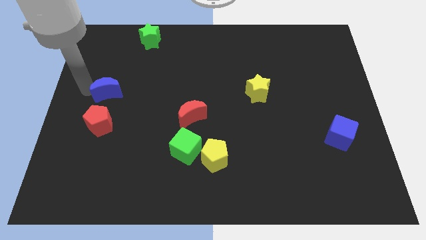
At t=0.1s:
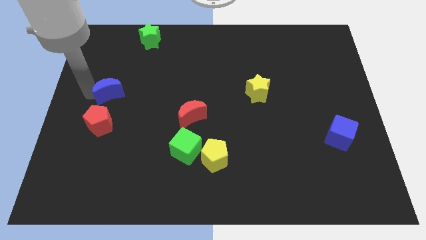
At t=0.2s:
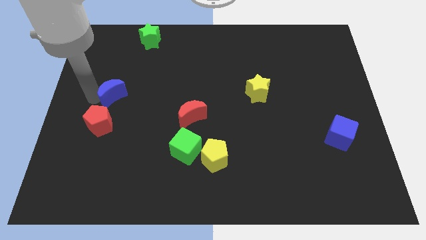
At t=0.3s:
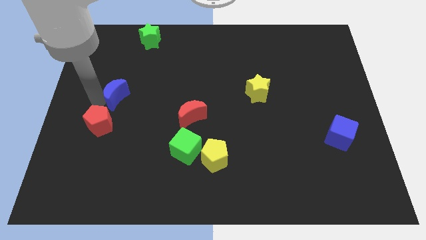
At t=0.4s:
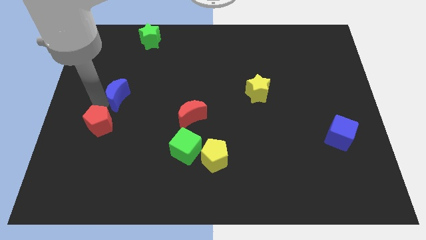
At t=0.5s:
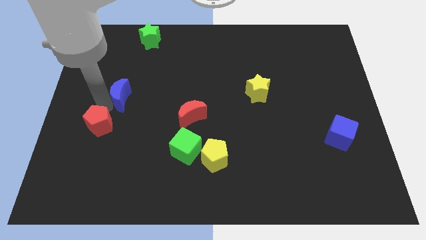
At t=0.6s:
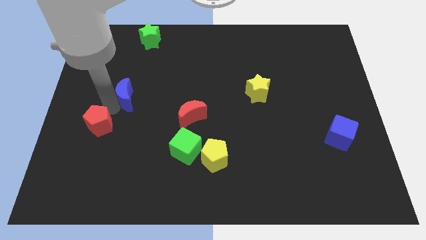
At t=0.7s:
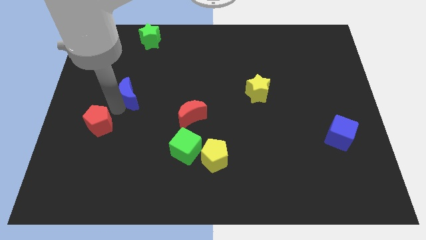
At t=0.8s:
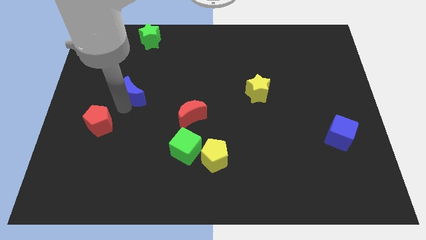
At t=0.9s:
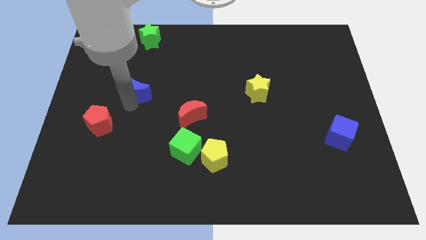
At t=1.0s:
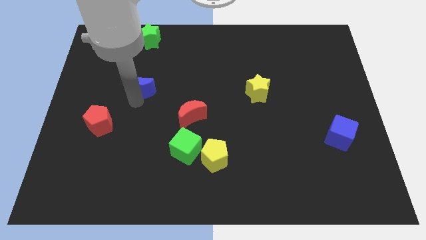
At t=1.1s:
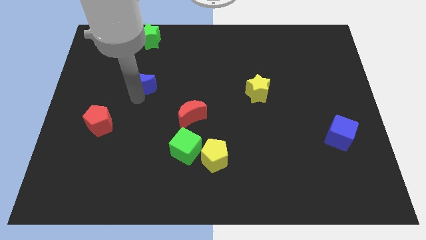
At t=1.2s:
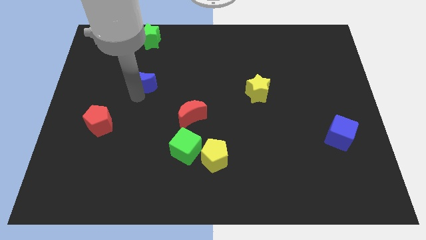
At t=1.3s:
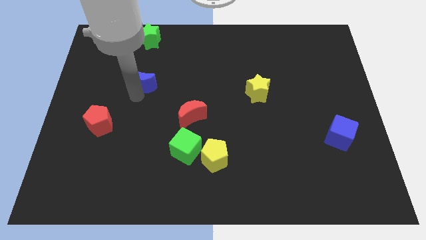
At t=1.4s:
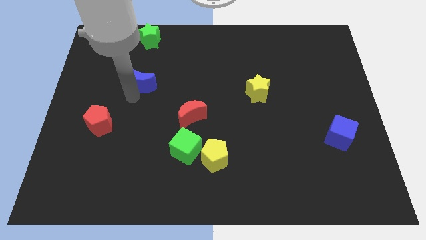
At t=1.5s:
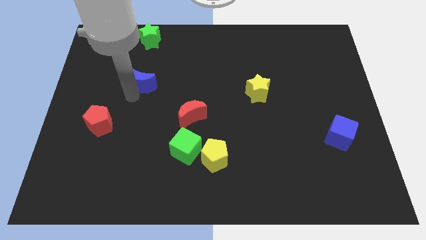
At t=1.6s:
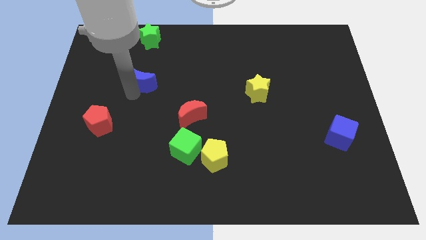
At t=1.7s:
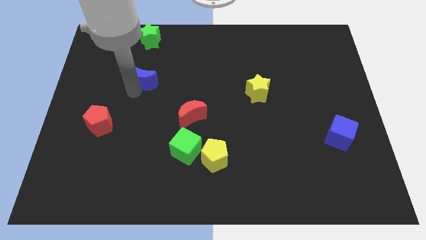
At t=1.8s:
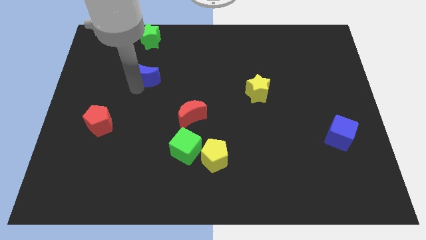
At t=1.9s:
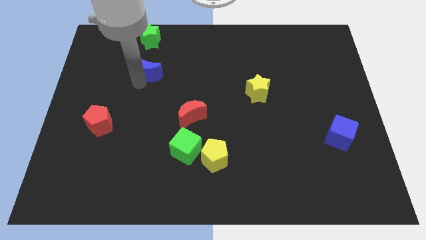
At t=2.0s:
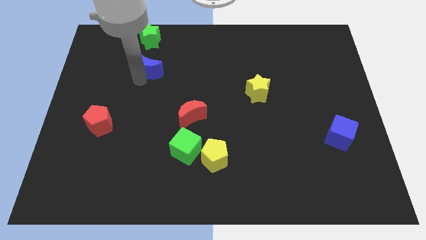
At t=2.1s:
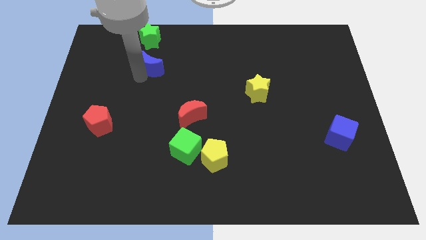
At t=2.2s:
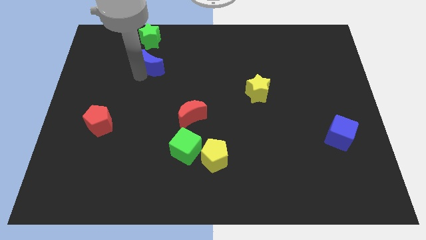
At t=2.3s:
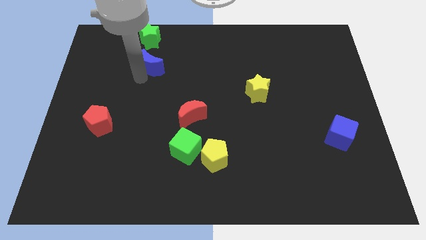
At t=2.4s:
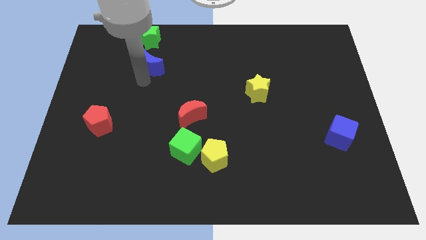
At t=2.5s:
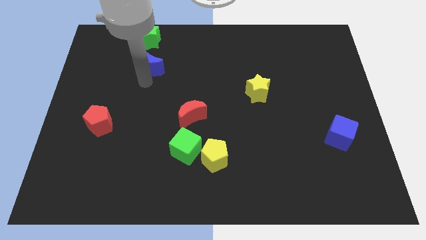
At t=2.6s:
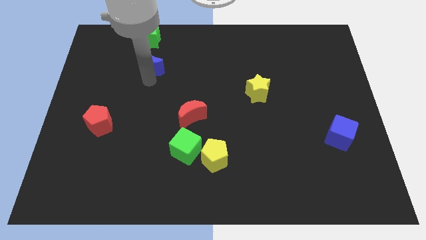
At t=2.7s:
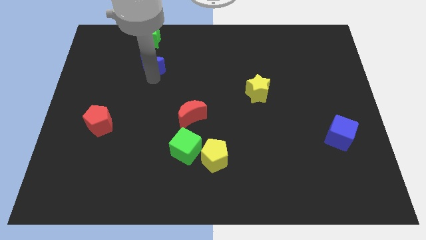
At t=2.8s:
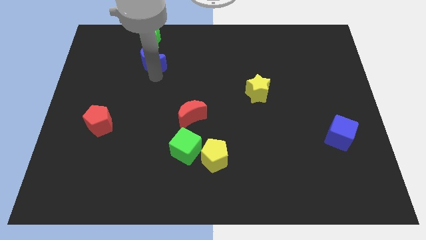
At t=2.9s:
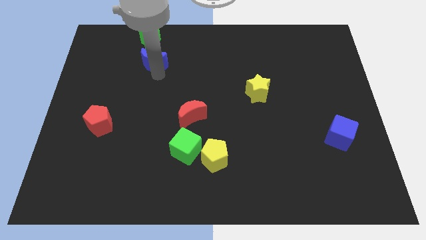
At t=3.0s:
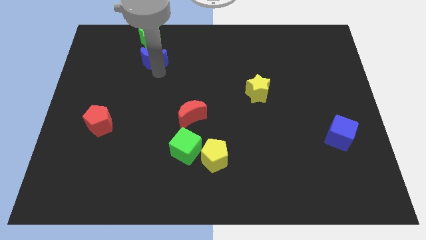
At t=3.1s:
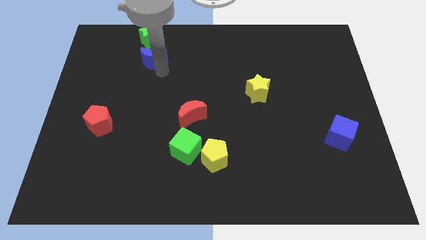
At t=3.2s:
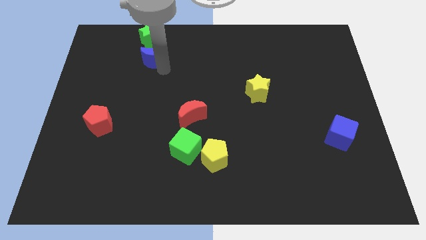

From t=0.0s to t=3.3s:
push the blue cube bottom to the green star

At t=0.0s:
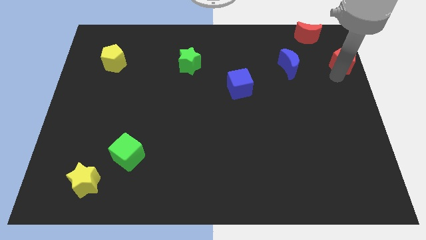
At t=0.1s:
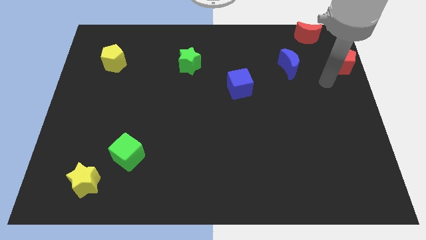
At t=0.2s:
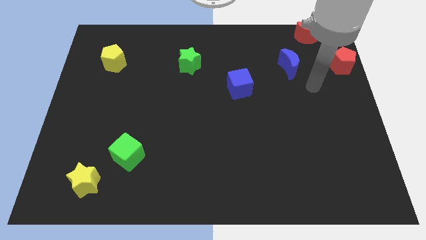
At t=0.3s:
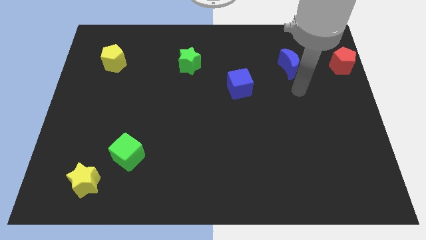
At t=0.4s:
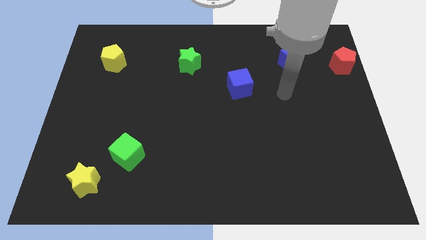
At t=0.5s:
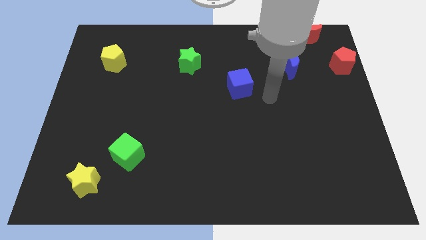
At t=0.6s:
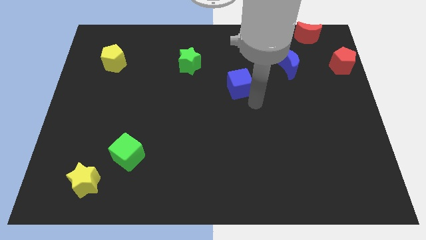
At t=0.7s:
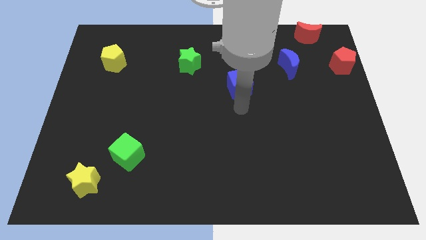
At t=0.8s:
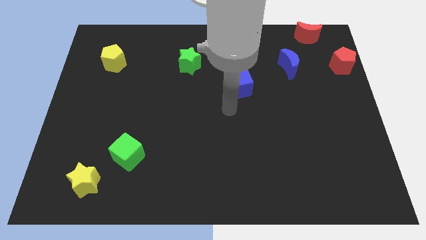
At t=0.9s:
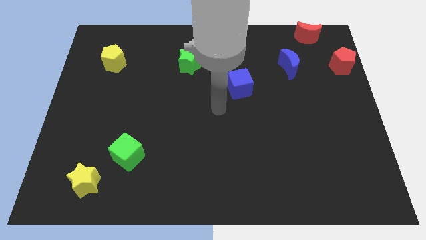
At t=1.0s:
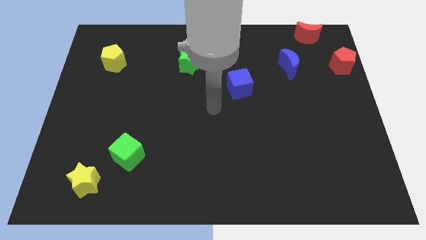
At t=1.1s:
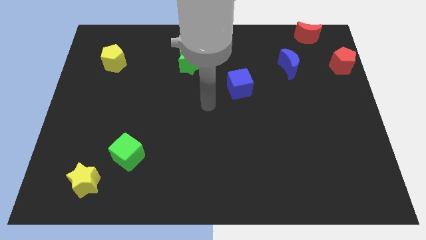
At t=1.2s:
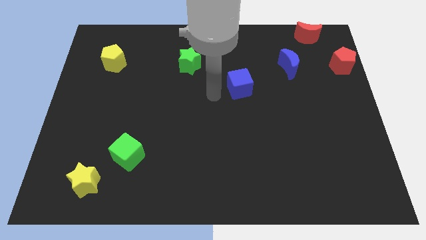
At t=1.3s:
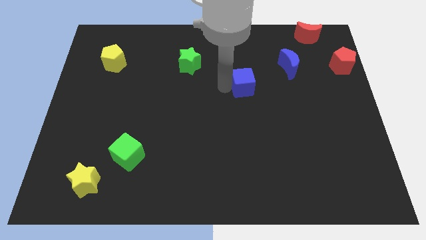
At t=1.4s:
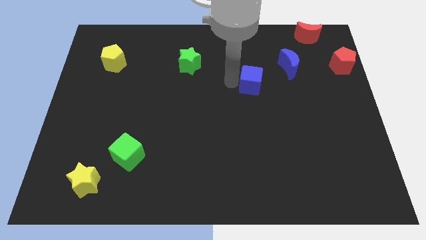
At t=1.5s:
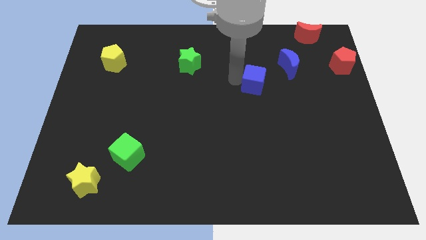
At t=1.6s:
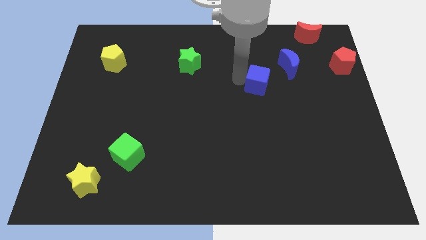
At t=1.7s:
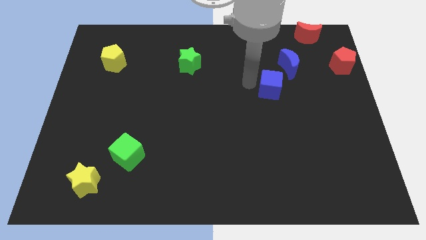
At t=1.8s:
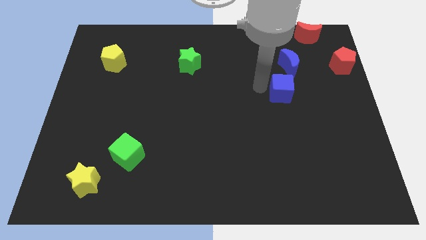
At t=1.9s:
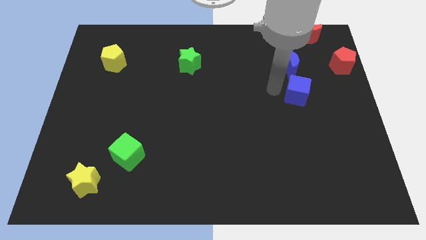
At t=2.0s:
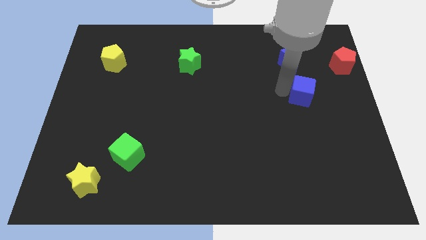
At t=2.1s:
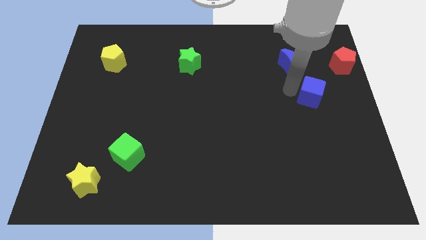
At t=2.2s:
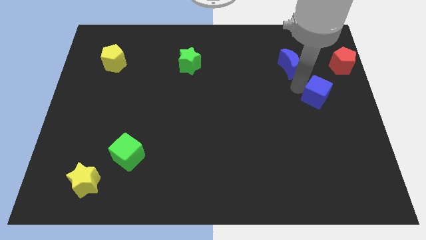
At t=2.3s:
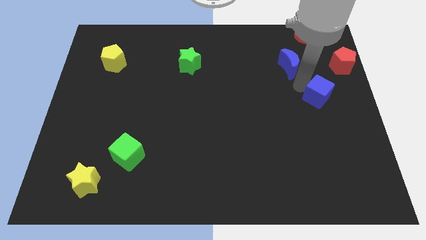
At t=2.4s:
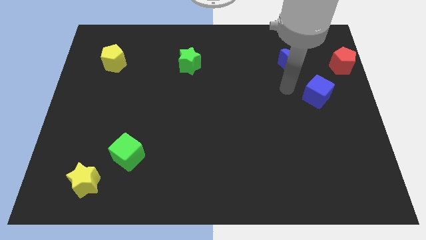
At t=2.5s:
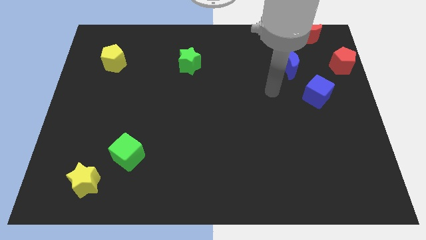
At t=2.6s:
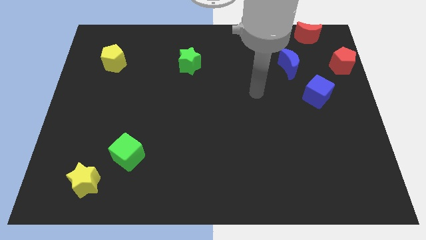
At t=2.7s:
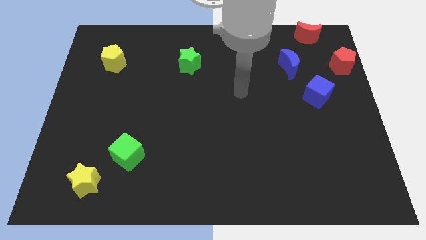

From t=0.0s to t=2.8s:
place the blue cube vertically below the red moon

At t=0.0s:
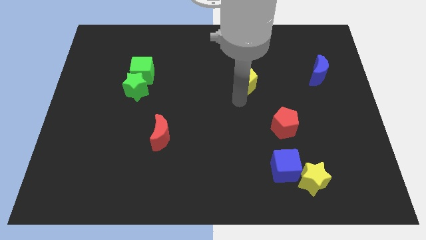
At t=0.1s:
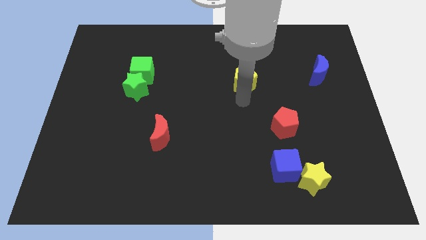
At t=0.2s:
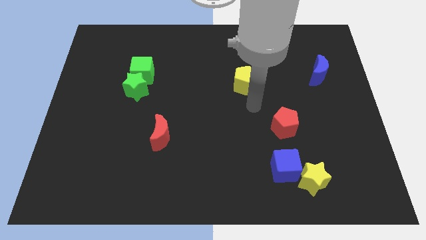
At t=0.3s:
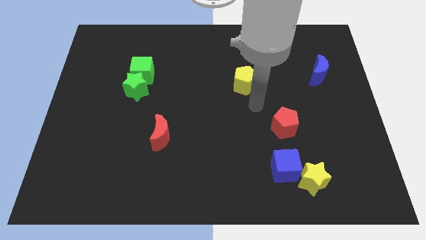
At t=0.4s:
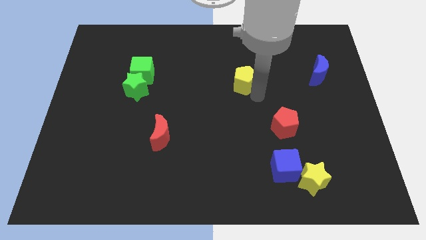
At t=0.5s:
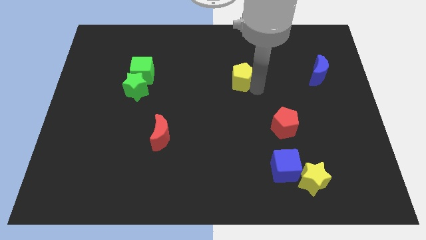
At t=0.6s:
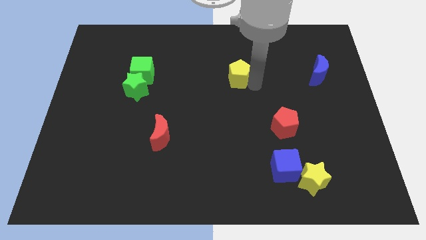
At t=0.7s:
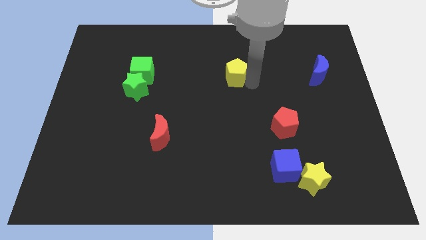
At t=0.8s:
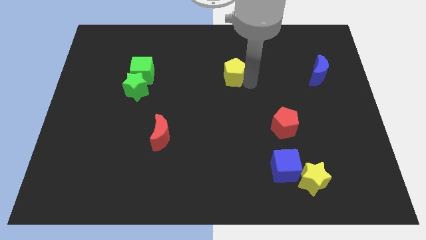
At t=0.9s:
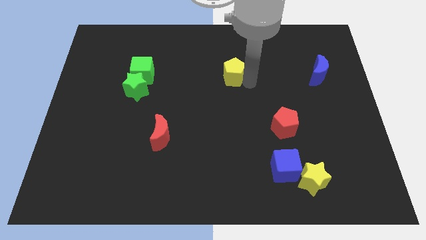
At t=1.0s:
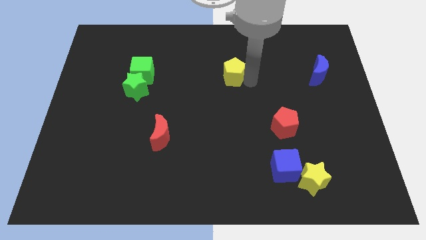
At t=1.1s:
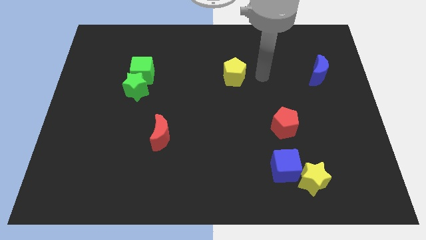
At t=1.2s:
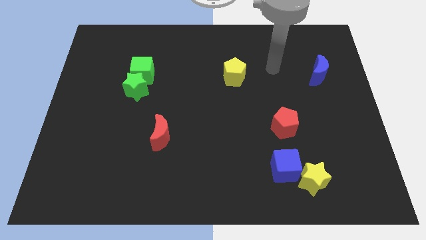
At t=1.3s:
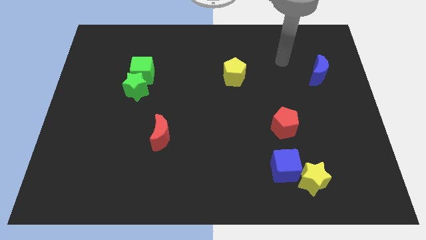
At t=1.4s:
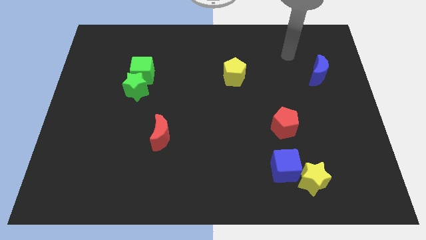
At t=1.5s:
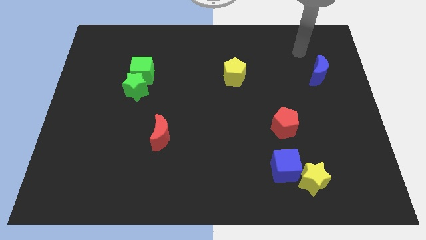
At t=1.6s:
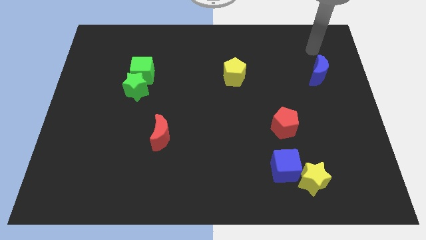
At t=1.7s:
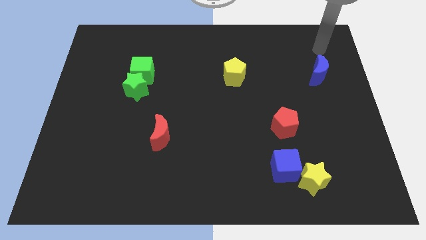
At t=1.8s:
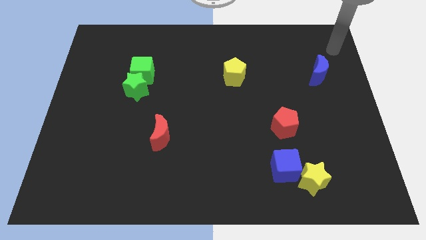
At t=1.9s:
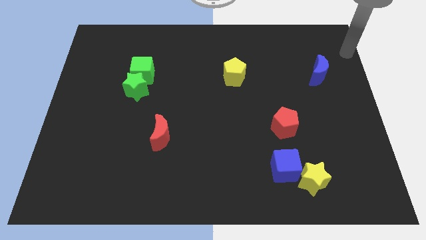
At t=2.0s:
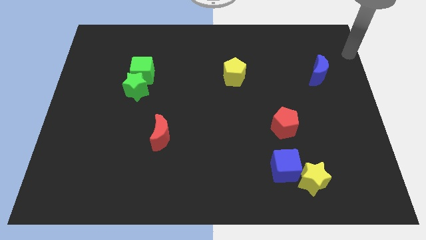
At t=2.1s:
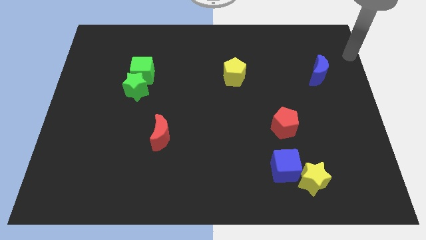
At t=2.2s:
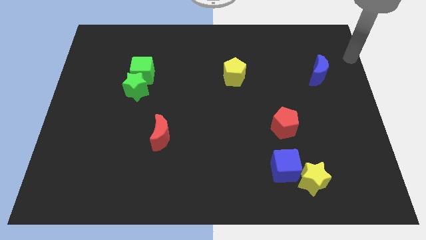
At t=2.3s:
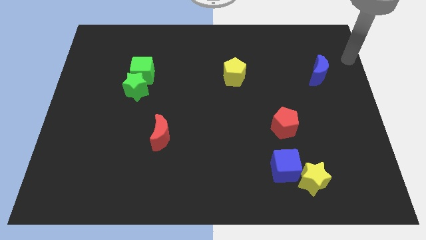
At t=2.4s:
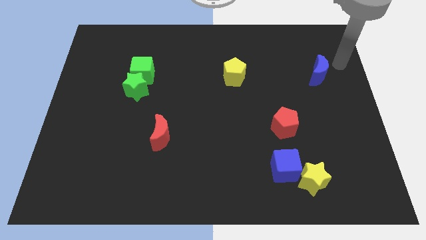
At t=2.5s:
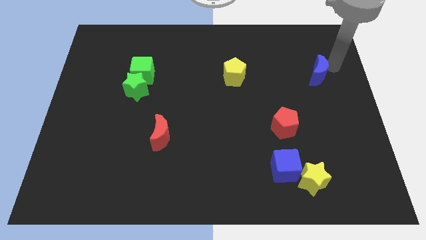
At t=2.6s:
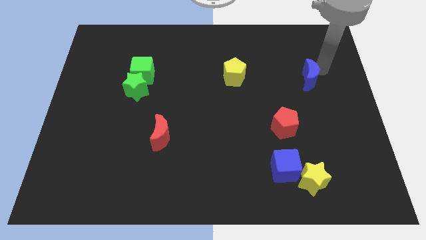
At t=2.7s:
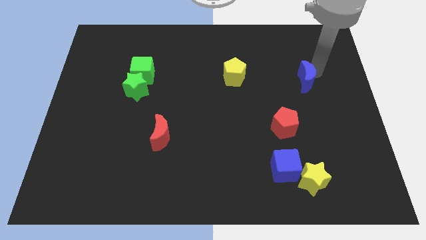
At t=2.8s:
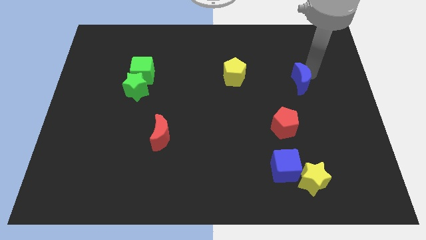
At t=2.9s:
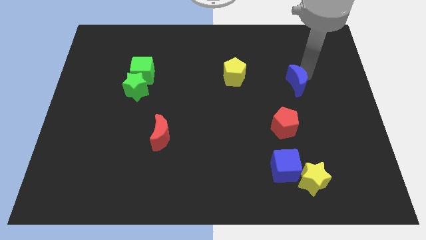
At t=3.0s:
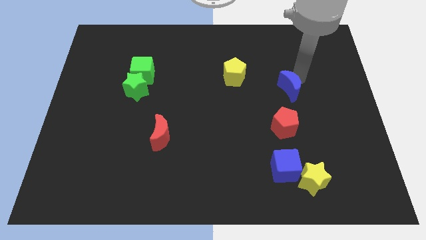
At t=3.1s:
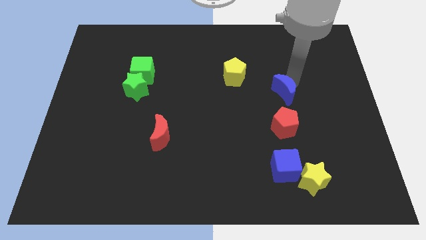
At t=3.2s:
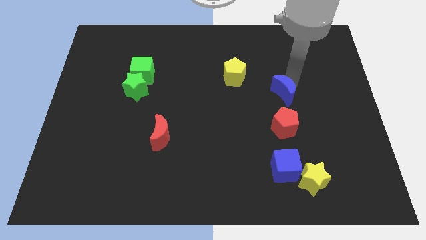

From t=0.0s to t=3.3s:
push the blue moon on the top of the red pentagon
